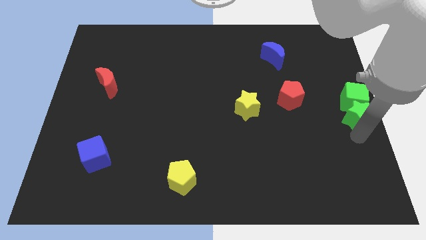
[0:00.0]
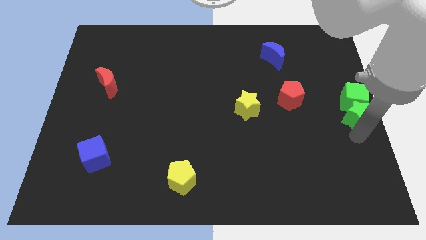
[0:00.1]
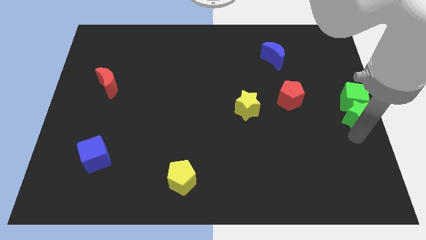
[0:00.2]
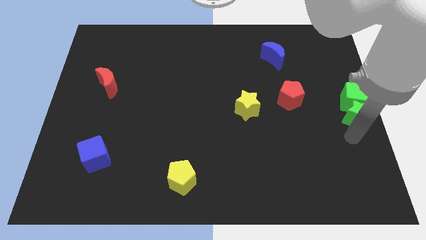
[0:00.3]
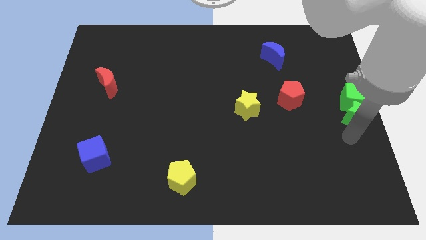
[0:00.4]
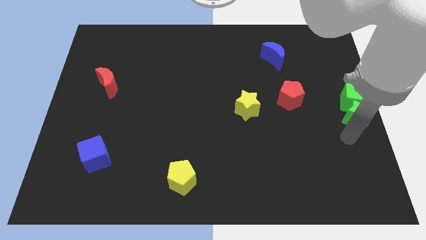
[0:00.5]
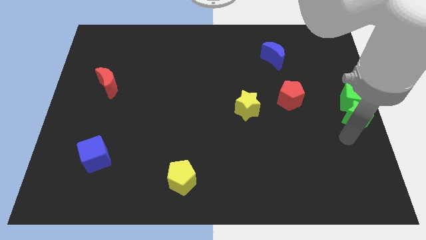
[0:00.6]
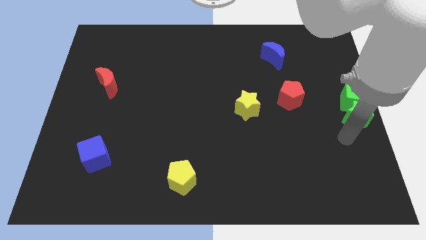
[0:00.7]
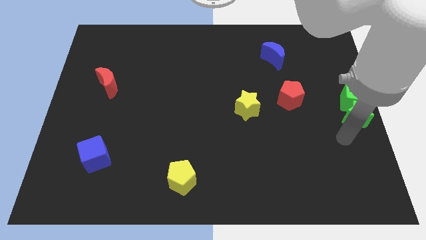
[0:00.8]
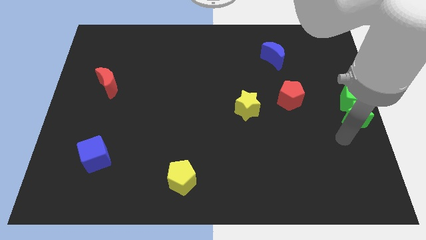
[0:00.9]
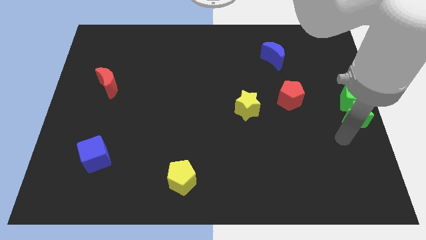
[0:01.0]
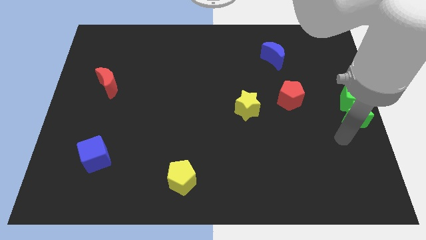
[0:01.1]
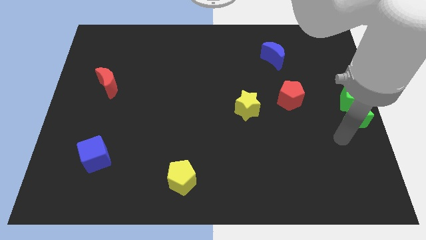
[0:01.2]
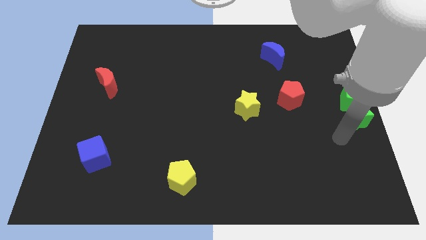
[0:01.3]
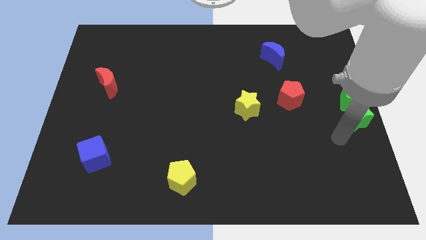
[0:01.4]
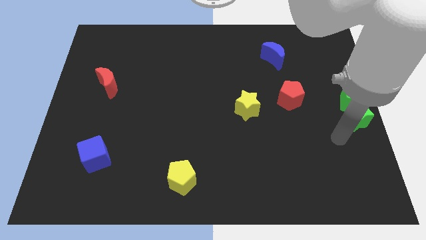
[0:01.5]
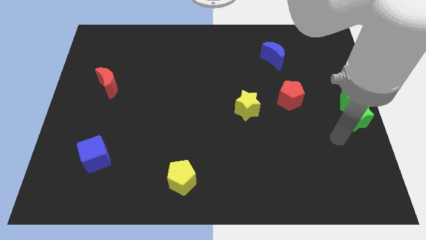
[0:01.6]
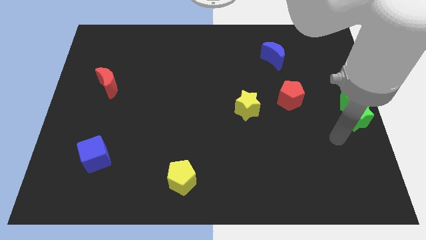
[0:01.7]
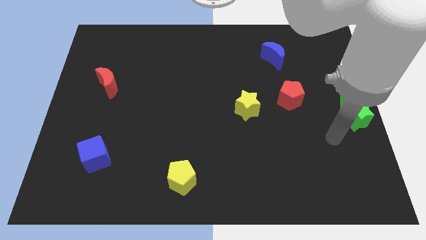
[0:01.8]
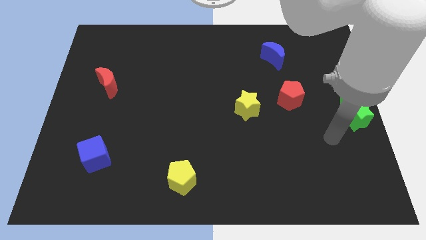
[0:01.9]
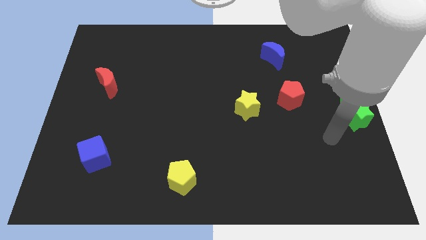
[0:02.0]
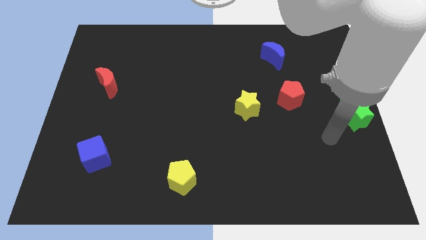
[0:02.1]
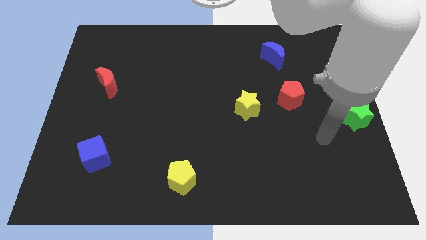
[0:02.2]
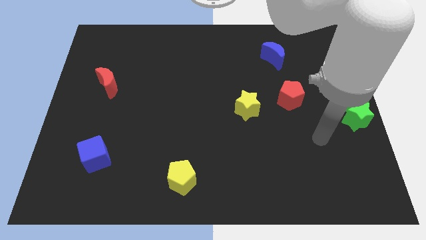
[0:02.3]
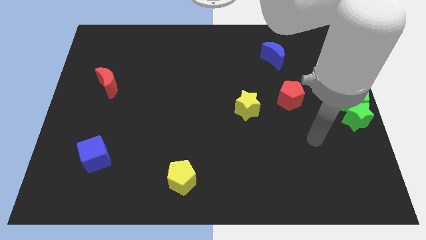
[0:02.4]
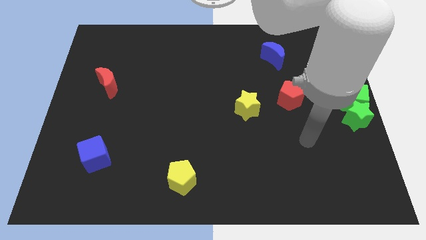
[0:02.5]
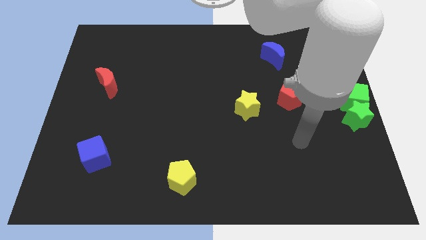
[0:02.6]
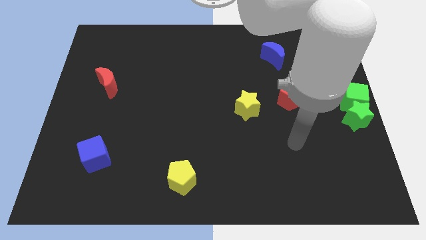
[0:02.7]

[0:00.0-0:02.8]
go away from the green star

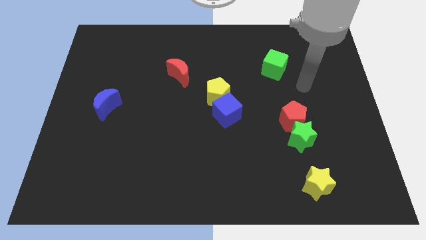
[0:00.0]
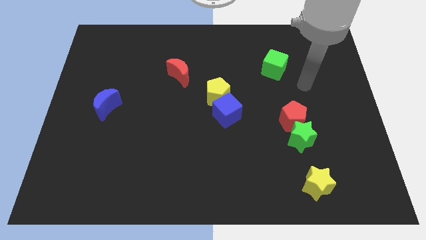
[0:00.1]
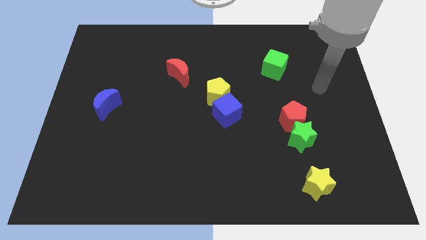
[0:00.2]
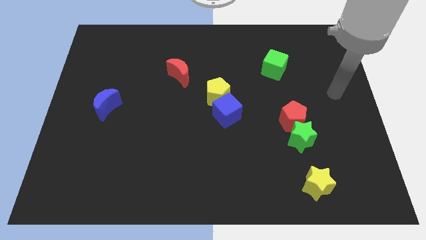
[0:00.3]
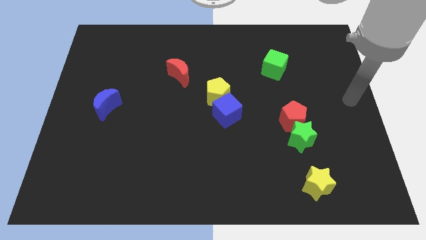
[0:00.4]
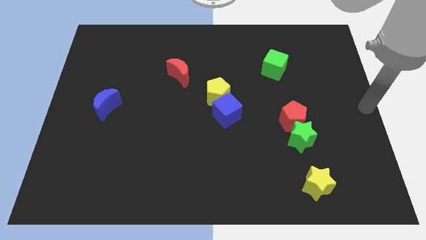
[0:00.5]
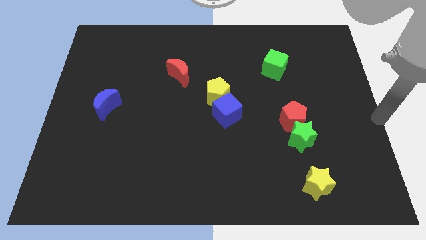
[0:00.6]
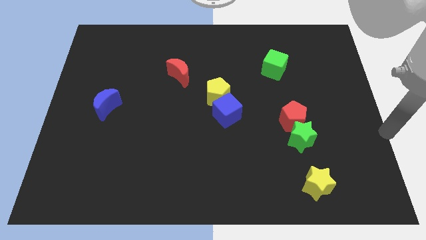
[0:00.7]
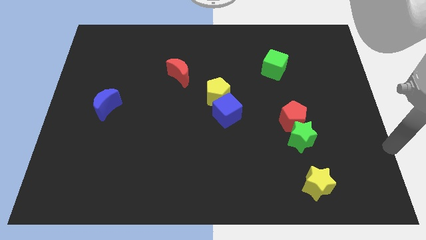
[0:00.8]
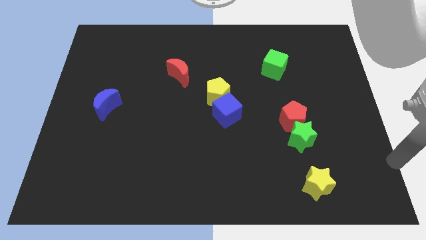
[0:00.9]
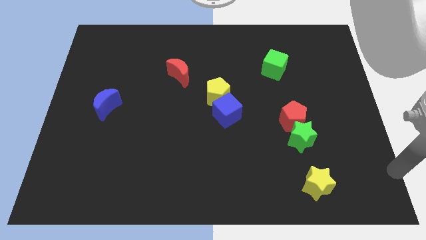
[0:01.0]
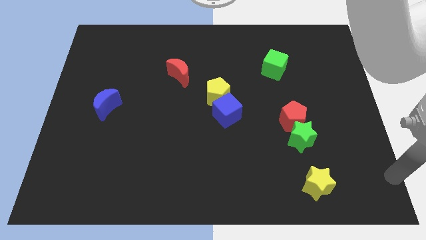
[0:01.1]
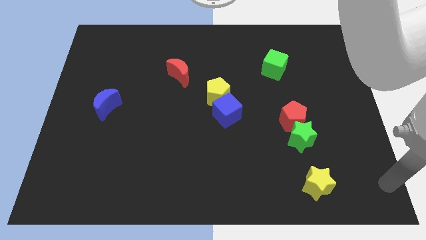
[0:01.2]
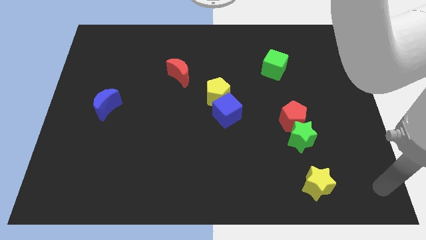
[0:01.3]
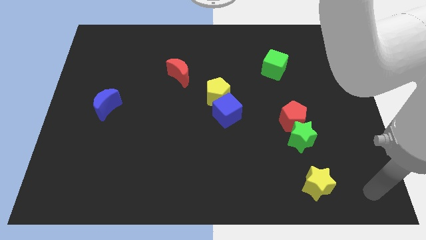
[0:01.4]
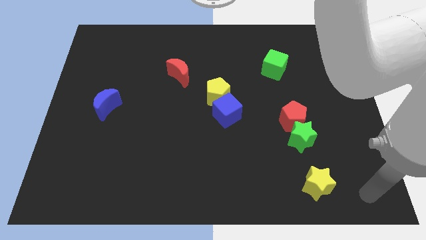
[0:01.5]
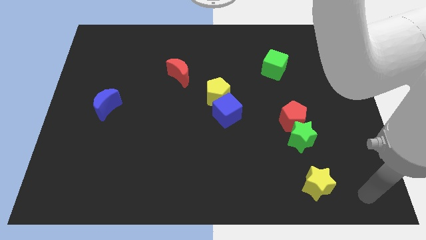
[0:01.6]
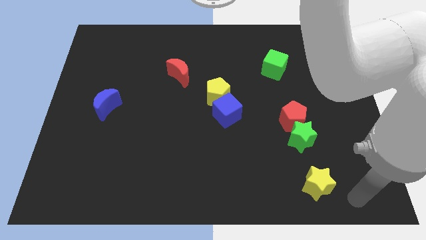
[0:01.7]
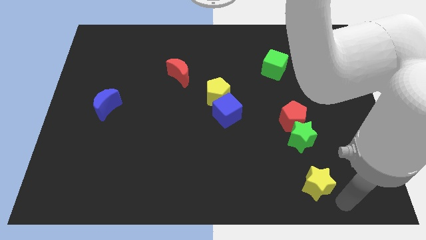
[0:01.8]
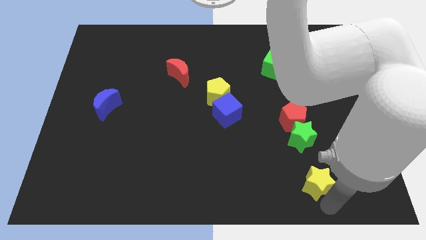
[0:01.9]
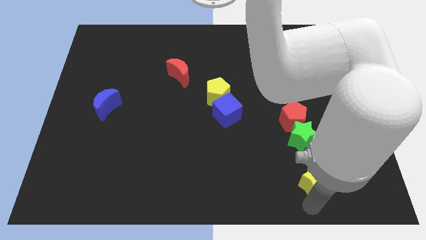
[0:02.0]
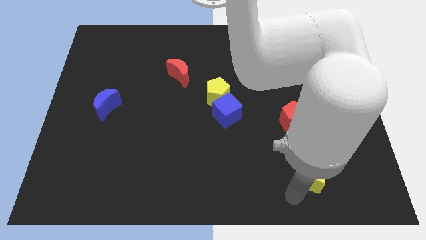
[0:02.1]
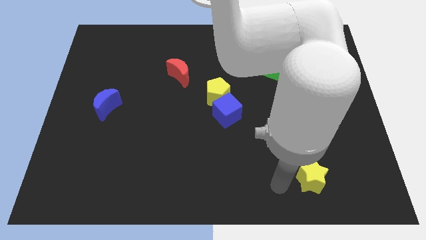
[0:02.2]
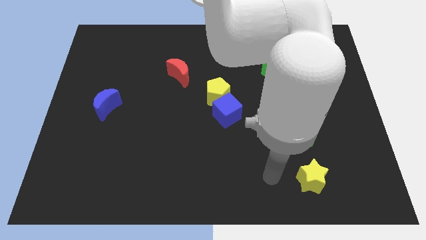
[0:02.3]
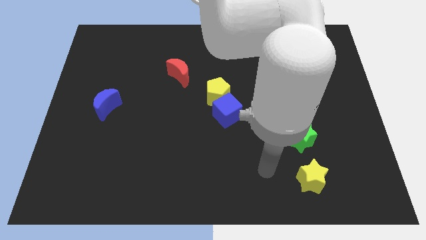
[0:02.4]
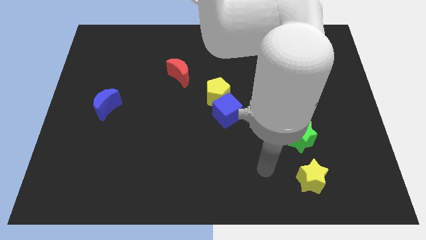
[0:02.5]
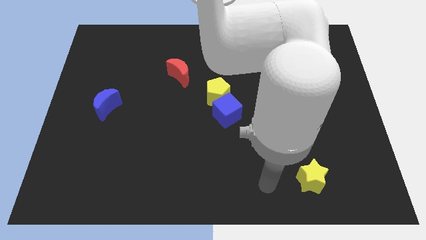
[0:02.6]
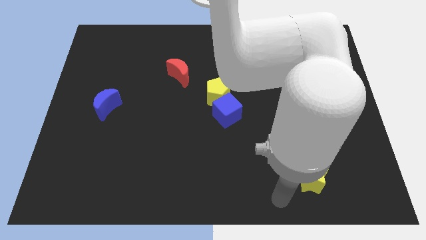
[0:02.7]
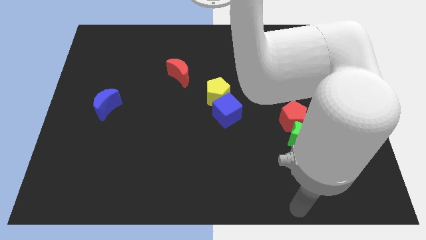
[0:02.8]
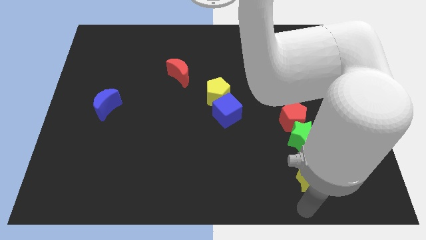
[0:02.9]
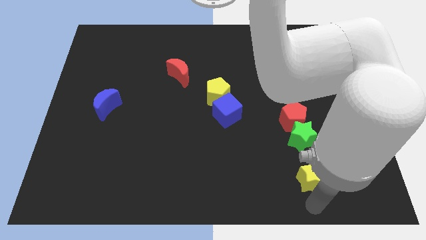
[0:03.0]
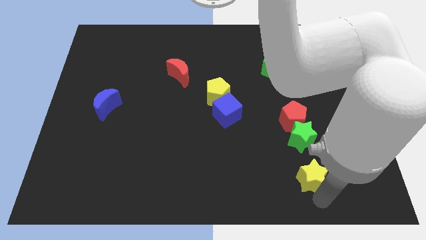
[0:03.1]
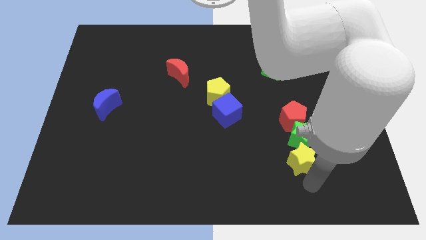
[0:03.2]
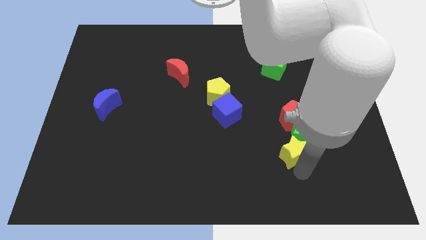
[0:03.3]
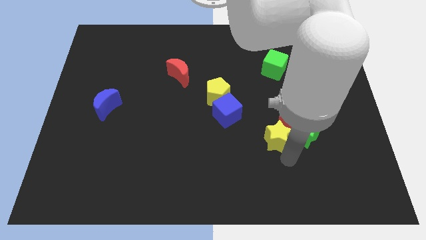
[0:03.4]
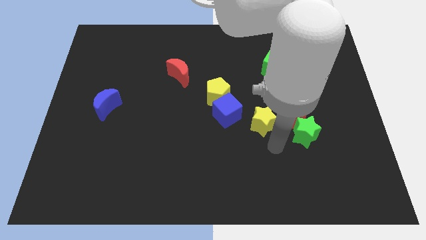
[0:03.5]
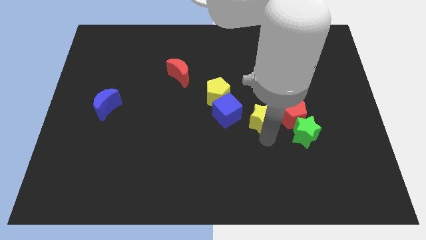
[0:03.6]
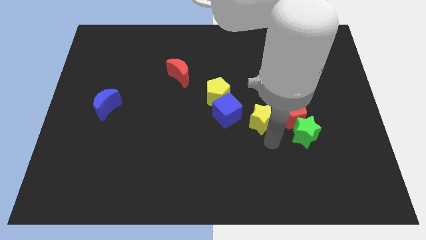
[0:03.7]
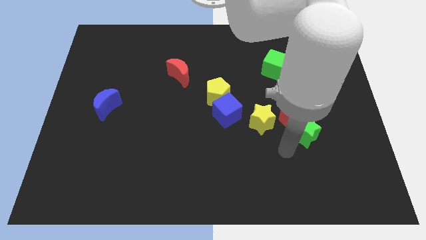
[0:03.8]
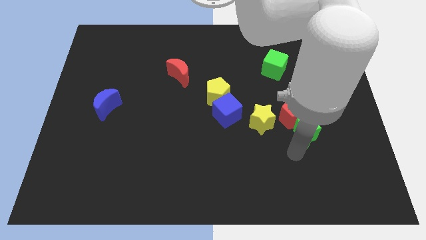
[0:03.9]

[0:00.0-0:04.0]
put the yellow star near to the right of the blue cube

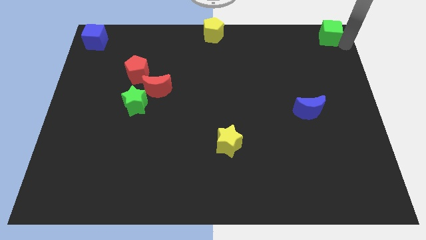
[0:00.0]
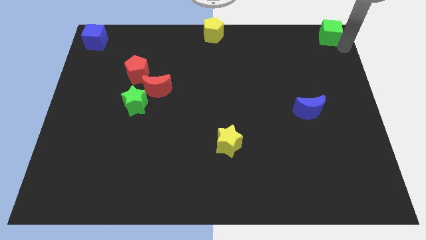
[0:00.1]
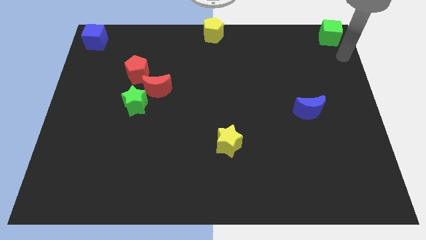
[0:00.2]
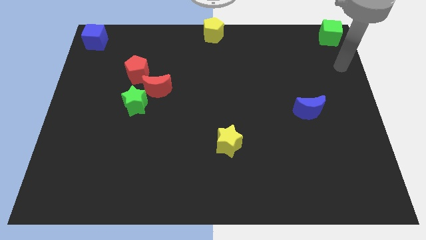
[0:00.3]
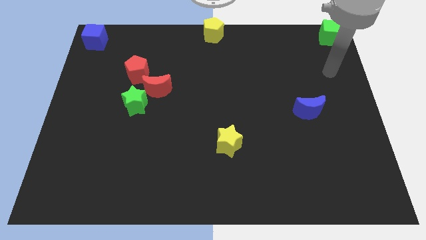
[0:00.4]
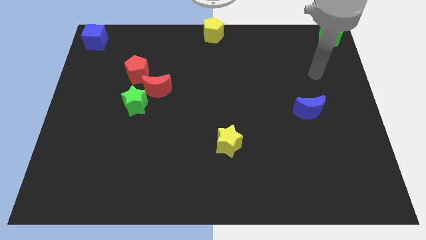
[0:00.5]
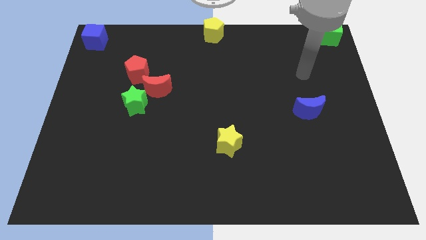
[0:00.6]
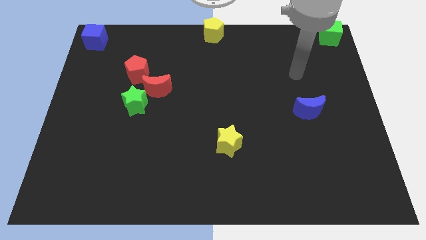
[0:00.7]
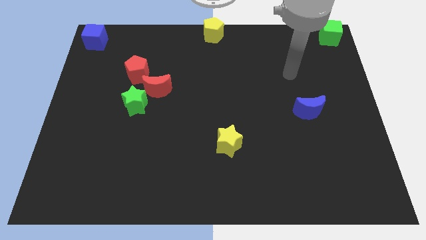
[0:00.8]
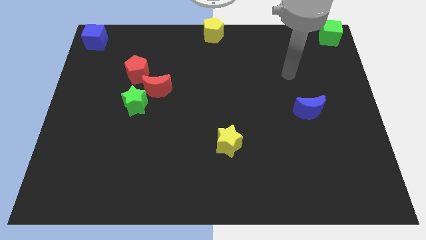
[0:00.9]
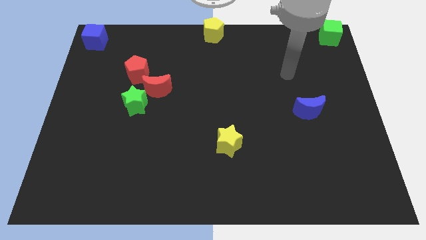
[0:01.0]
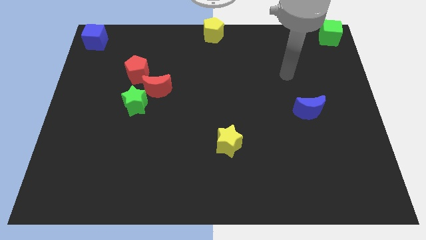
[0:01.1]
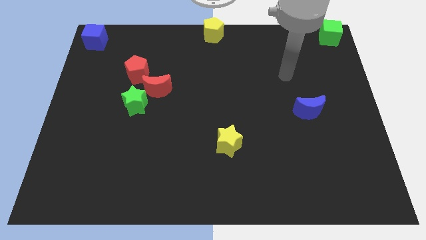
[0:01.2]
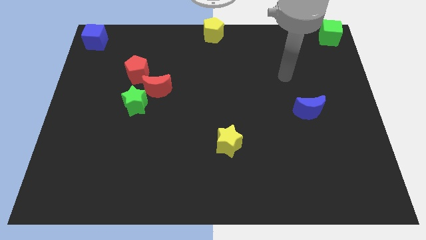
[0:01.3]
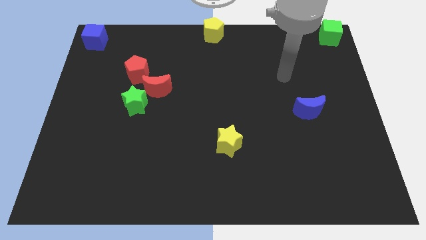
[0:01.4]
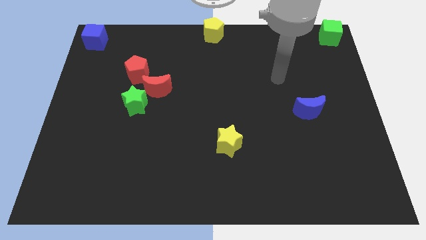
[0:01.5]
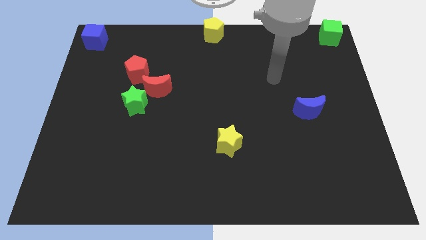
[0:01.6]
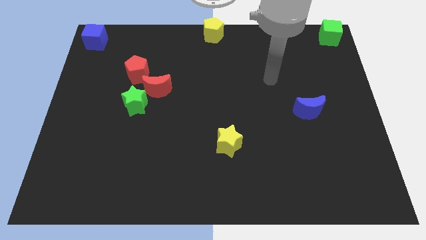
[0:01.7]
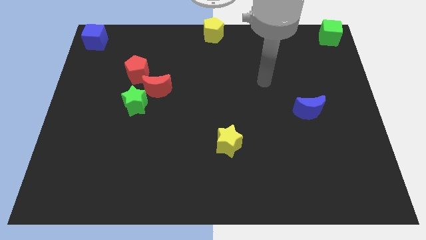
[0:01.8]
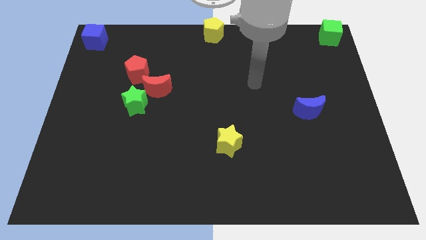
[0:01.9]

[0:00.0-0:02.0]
move your arm away from the green cube
